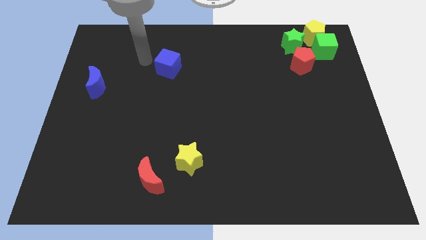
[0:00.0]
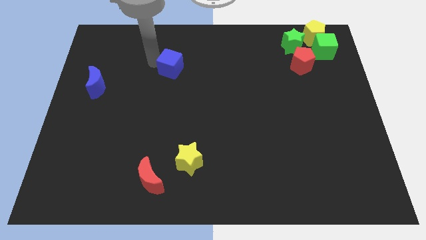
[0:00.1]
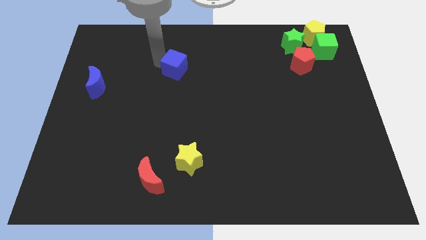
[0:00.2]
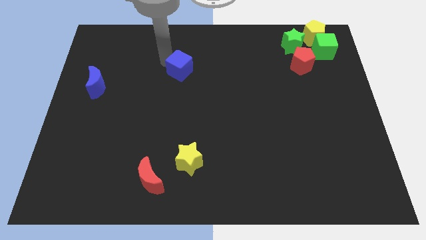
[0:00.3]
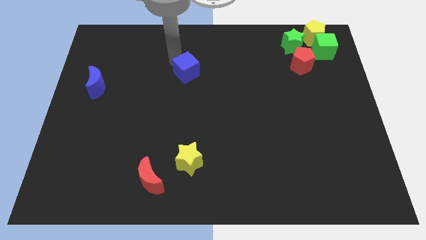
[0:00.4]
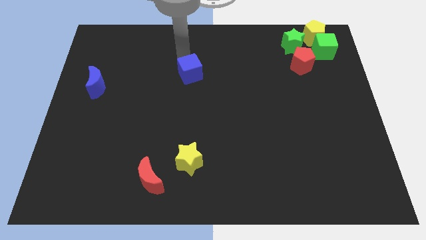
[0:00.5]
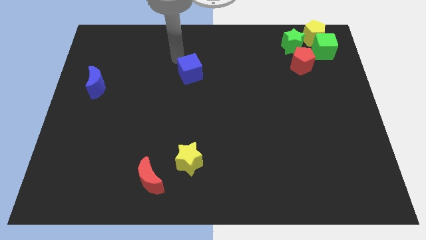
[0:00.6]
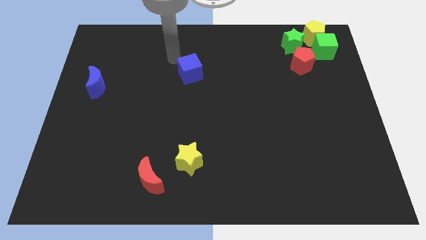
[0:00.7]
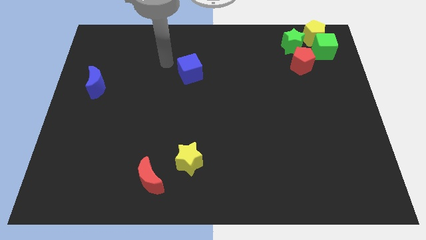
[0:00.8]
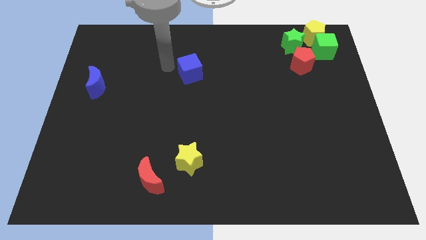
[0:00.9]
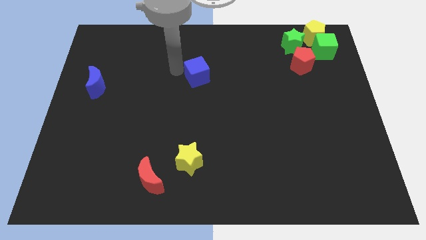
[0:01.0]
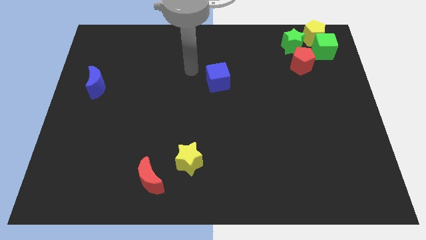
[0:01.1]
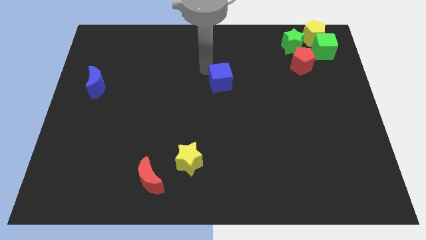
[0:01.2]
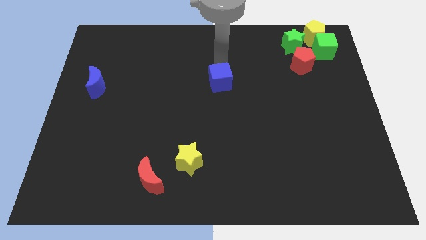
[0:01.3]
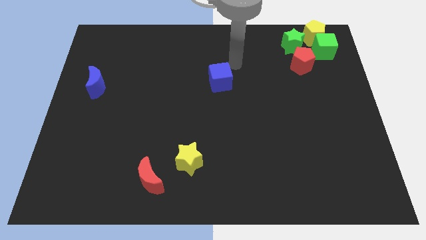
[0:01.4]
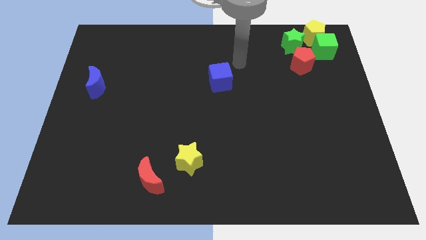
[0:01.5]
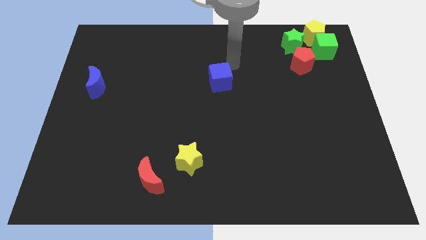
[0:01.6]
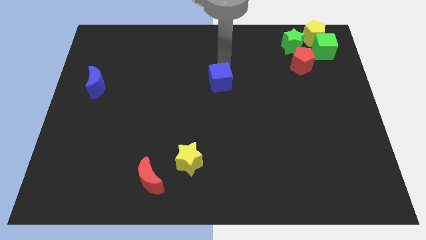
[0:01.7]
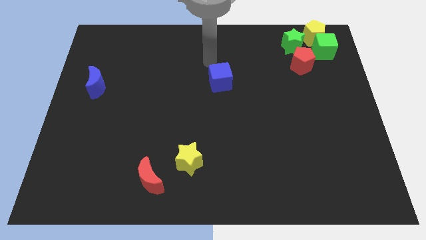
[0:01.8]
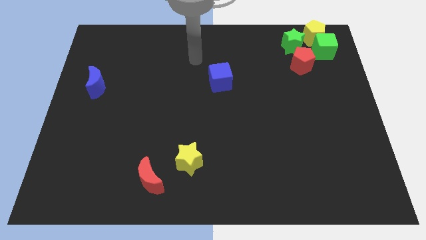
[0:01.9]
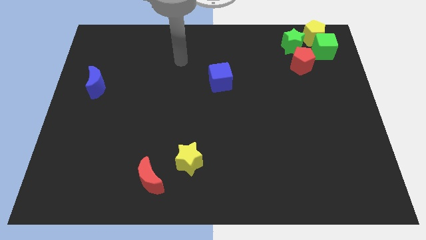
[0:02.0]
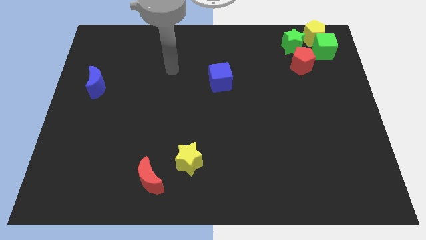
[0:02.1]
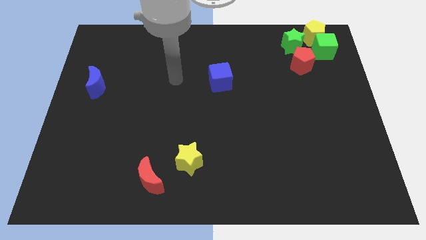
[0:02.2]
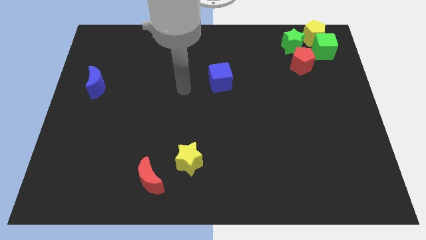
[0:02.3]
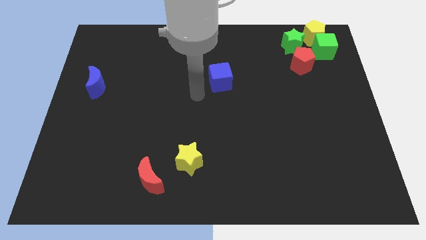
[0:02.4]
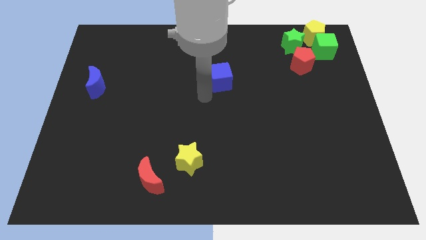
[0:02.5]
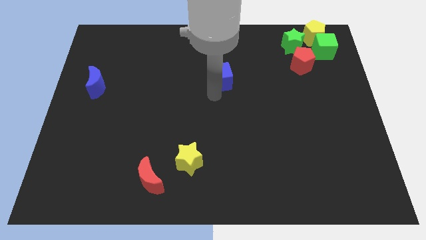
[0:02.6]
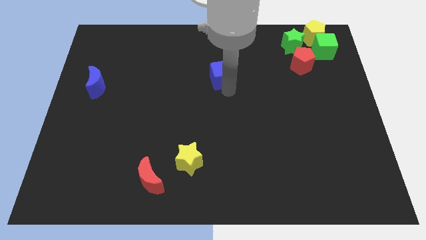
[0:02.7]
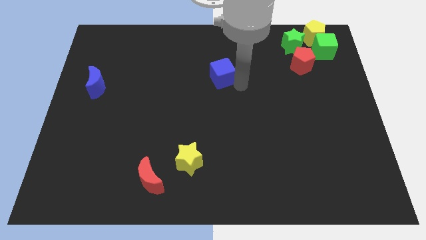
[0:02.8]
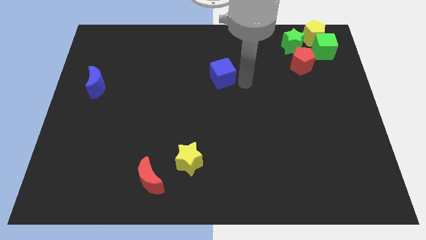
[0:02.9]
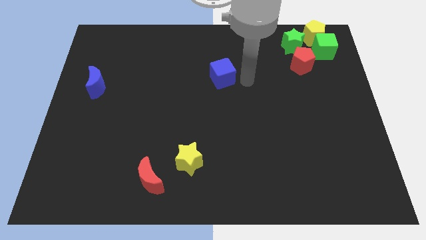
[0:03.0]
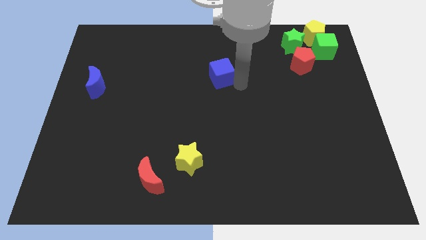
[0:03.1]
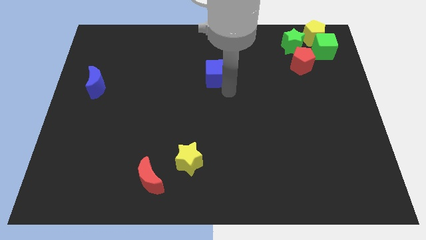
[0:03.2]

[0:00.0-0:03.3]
push the blue cube to the center of the board

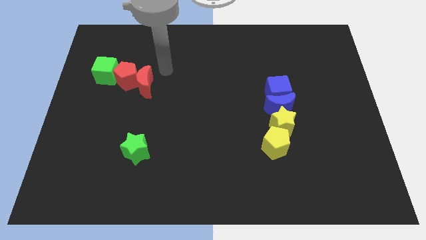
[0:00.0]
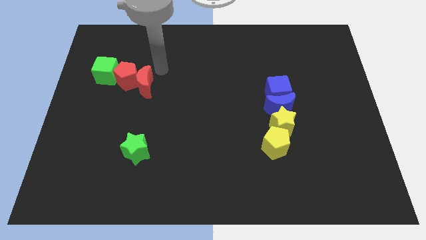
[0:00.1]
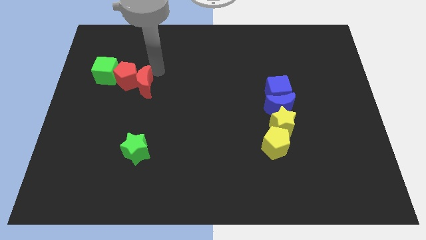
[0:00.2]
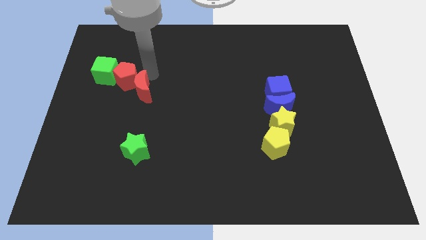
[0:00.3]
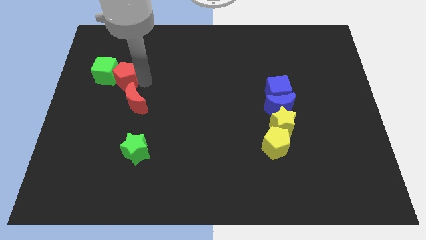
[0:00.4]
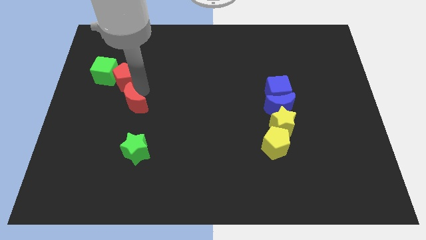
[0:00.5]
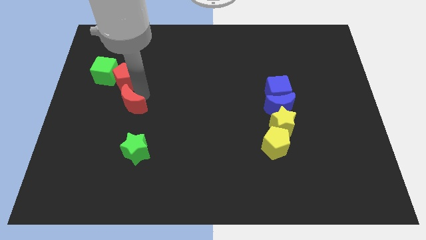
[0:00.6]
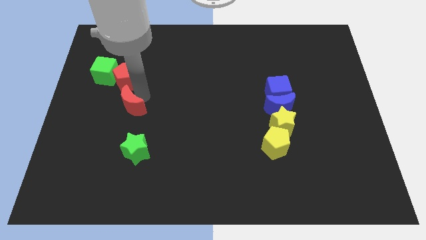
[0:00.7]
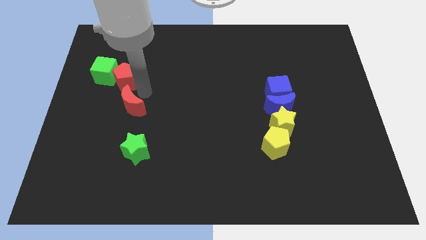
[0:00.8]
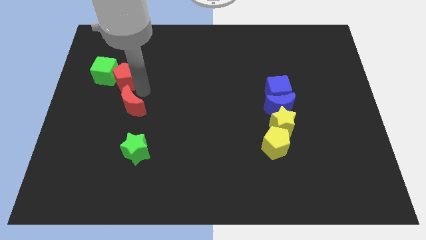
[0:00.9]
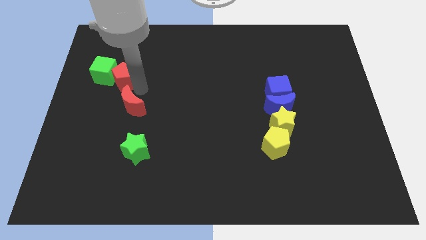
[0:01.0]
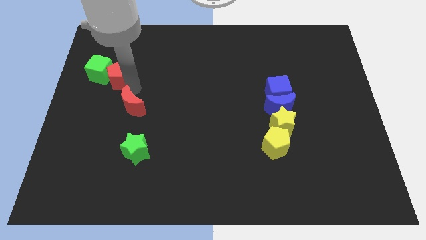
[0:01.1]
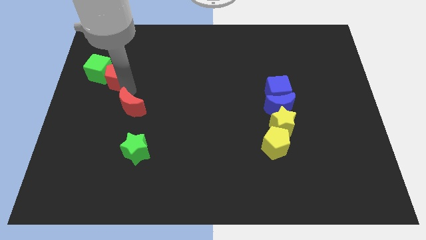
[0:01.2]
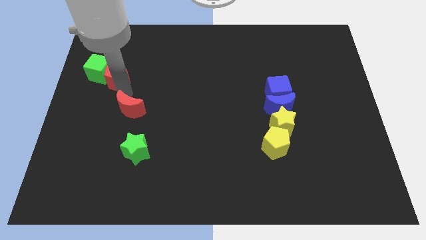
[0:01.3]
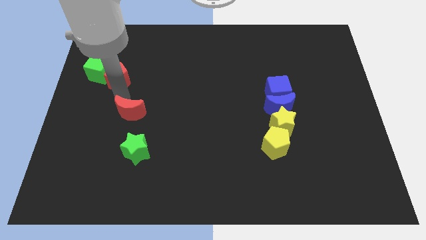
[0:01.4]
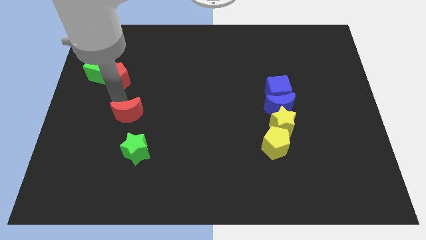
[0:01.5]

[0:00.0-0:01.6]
separate red moon from the red pentagon

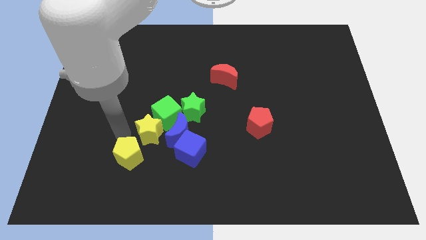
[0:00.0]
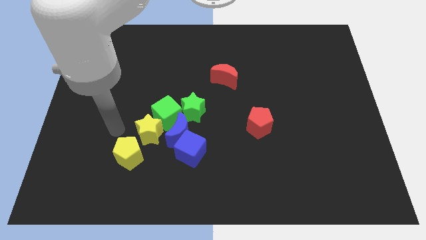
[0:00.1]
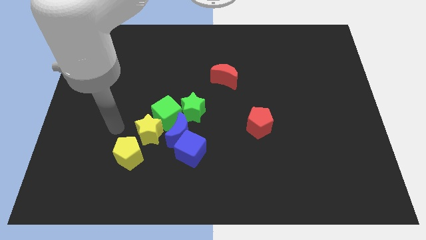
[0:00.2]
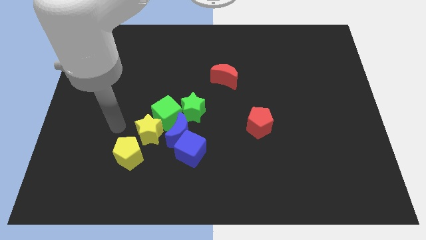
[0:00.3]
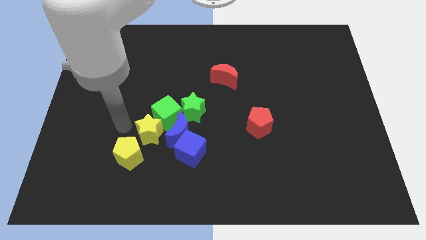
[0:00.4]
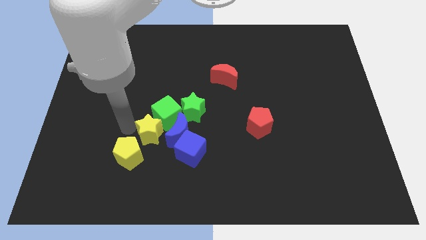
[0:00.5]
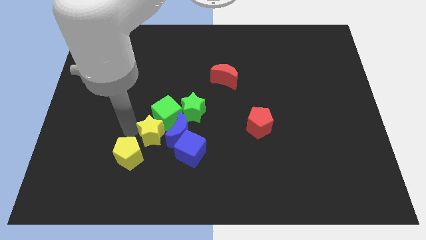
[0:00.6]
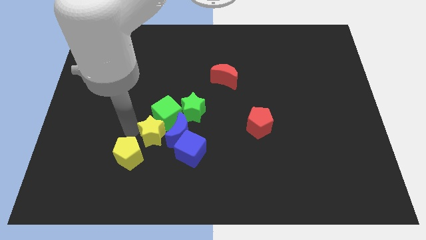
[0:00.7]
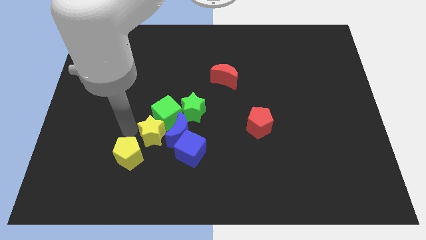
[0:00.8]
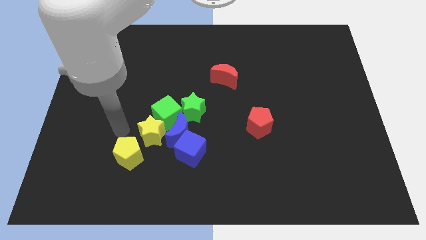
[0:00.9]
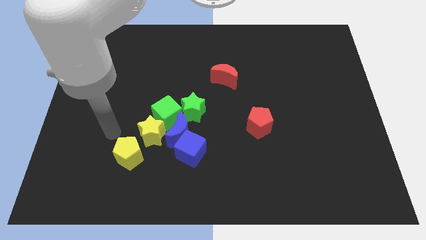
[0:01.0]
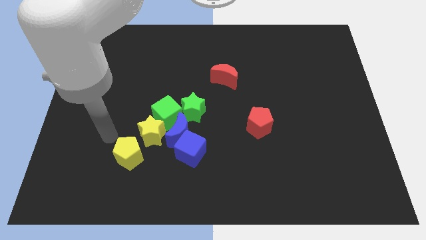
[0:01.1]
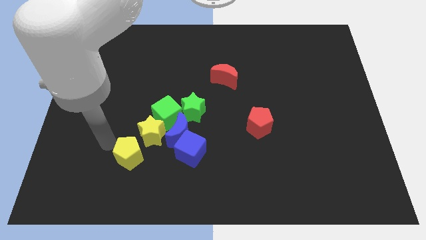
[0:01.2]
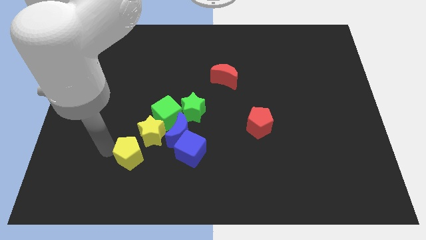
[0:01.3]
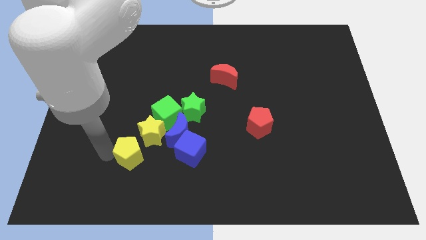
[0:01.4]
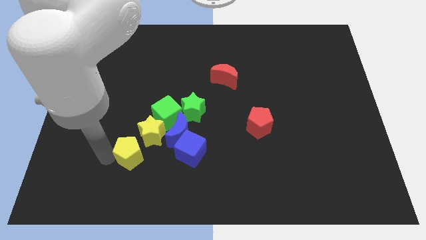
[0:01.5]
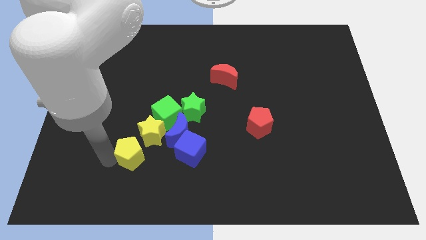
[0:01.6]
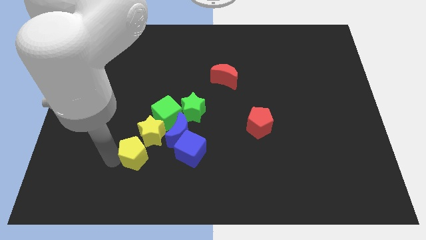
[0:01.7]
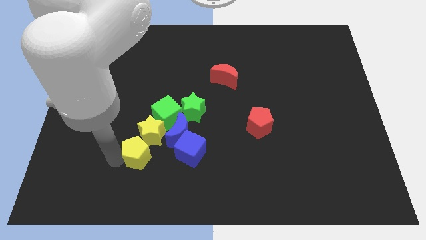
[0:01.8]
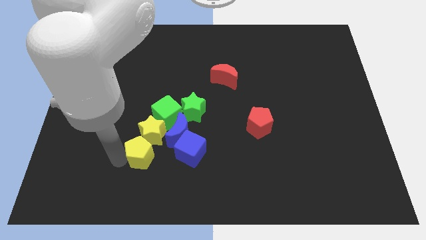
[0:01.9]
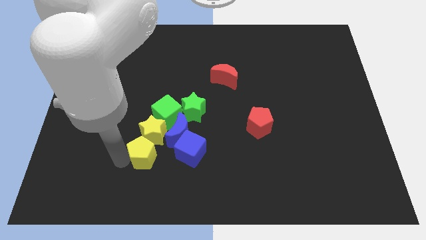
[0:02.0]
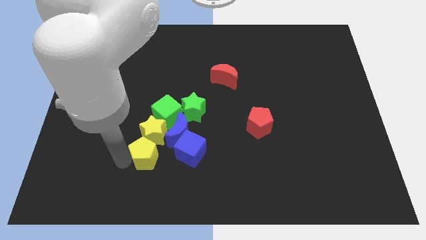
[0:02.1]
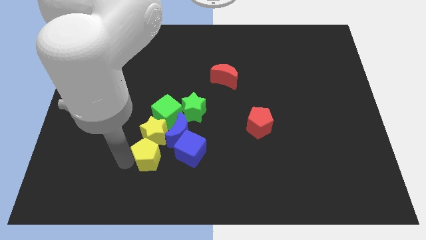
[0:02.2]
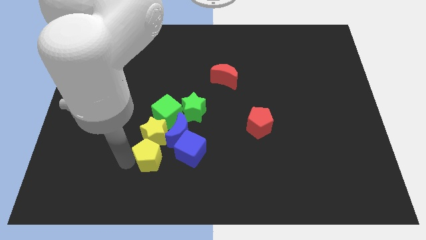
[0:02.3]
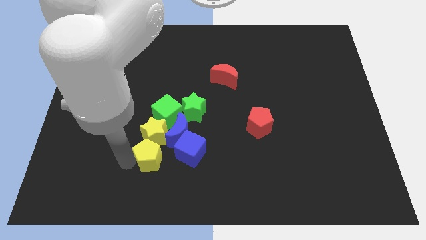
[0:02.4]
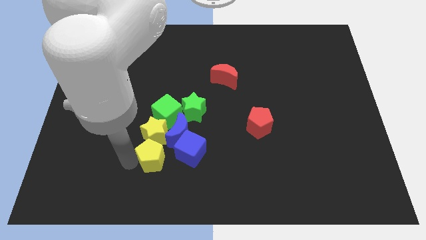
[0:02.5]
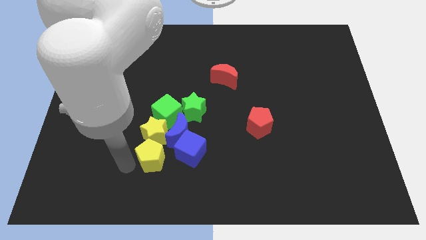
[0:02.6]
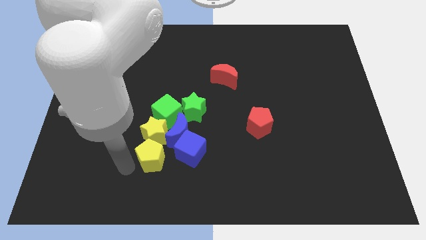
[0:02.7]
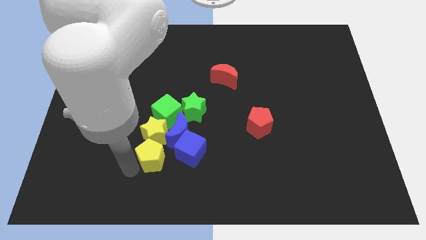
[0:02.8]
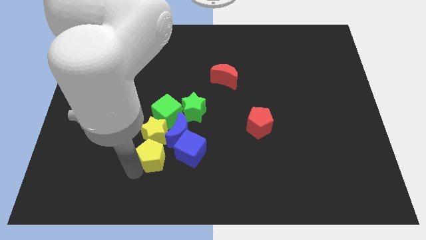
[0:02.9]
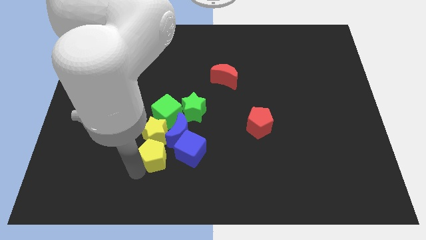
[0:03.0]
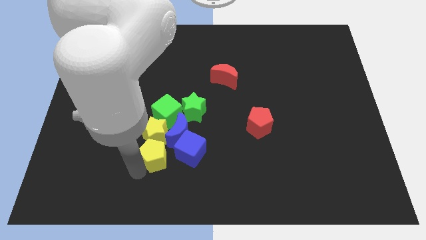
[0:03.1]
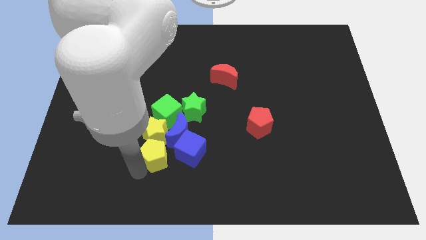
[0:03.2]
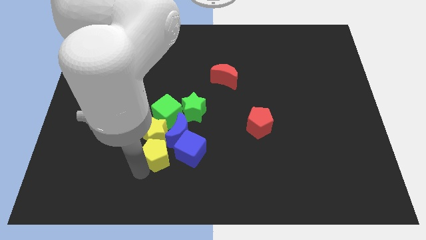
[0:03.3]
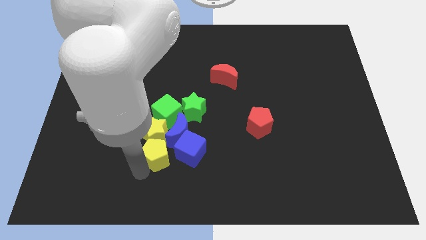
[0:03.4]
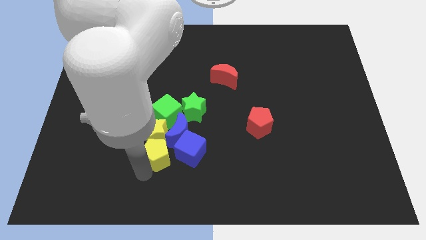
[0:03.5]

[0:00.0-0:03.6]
move the yellow pentagon towards the group of blocks

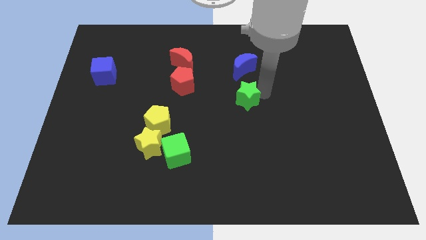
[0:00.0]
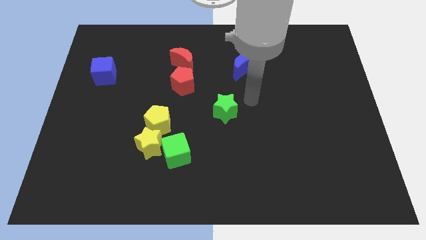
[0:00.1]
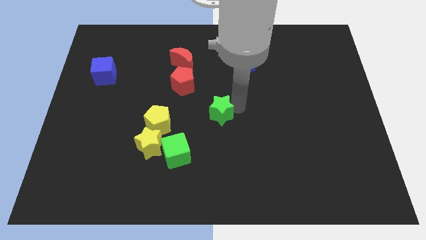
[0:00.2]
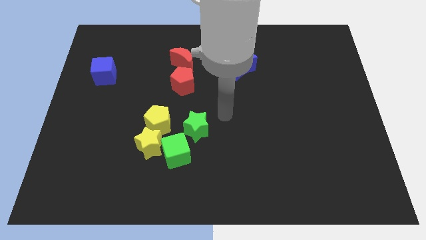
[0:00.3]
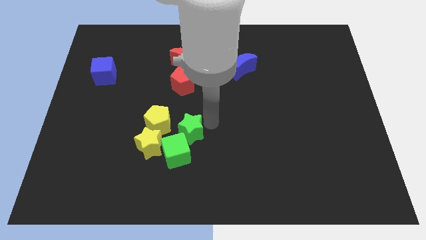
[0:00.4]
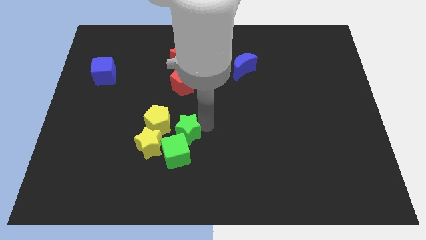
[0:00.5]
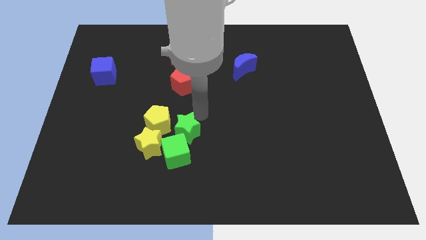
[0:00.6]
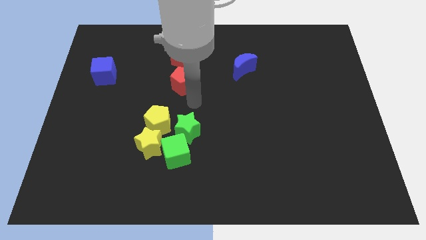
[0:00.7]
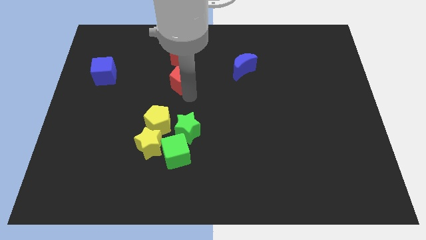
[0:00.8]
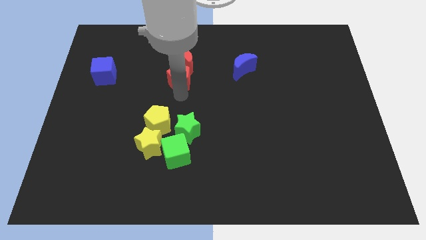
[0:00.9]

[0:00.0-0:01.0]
move the green star into the green cube
